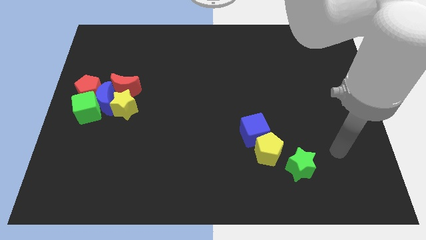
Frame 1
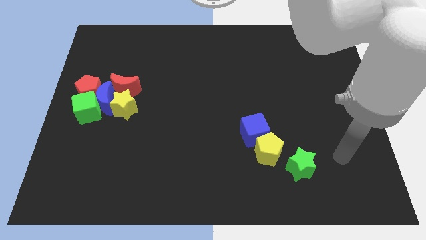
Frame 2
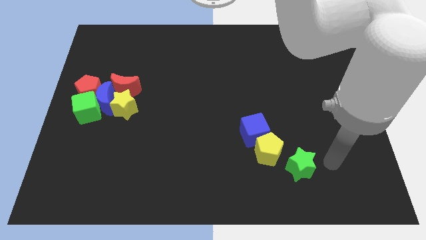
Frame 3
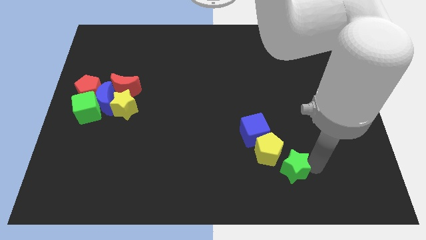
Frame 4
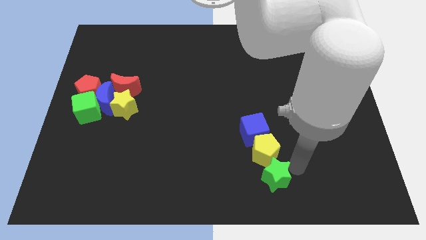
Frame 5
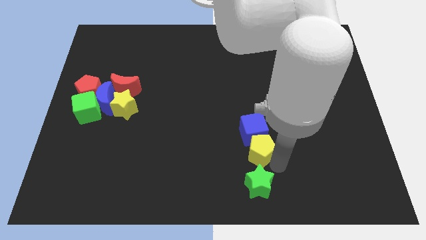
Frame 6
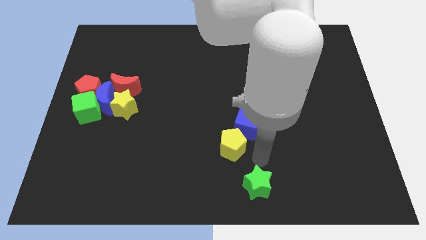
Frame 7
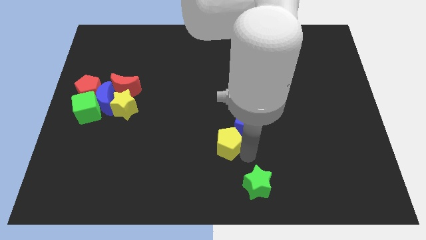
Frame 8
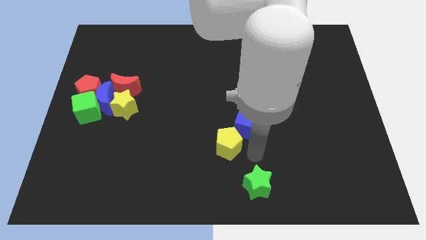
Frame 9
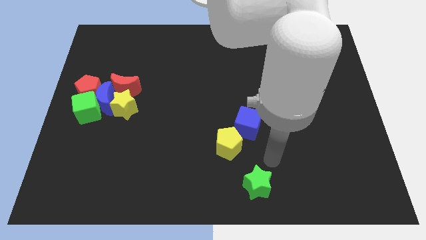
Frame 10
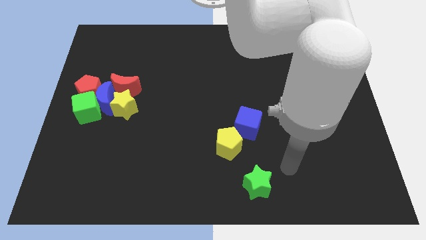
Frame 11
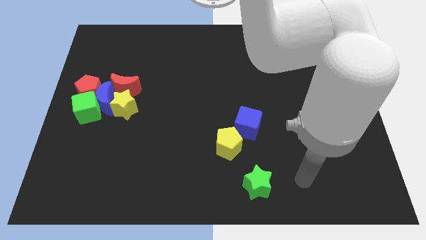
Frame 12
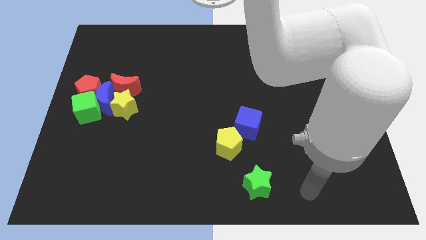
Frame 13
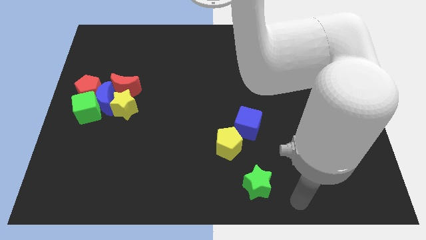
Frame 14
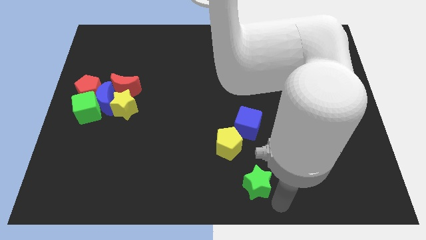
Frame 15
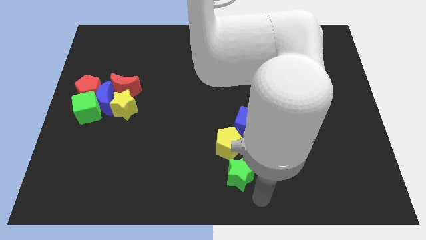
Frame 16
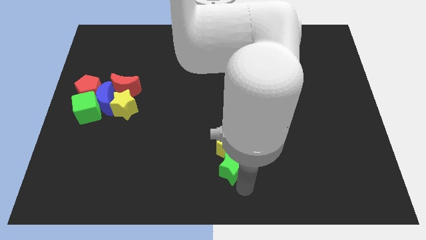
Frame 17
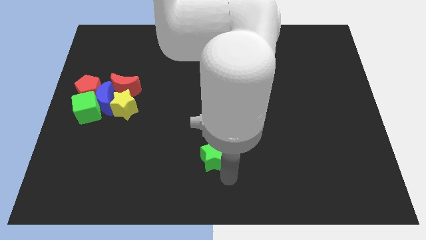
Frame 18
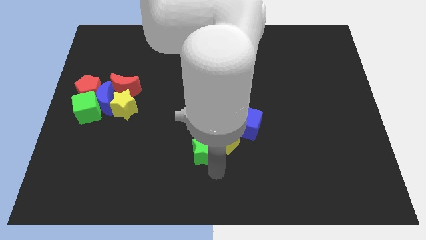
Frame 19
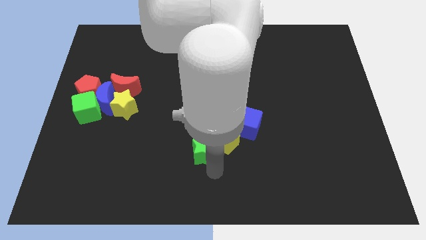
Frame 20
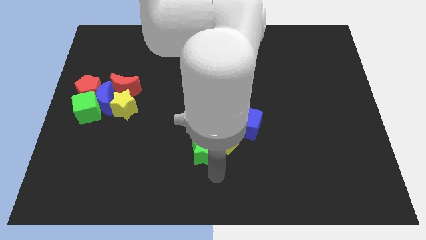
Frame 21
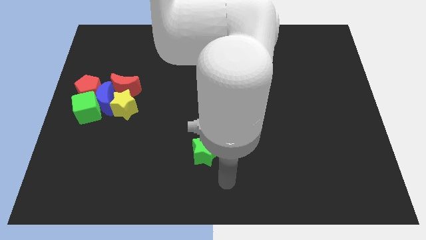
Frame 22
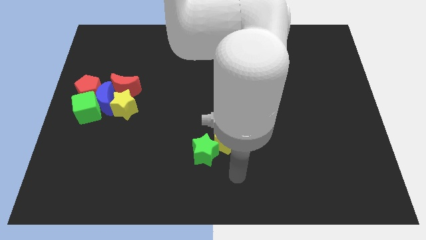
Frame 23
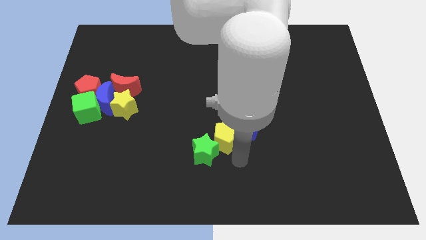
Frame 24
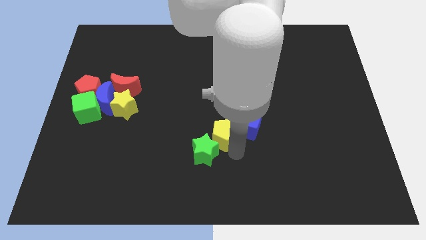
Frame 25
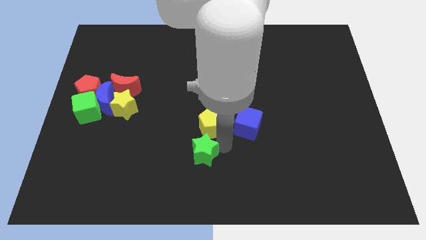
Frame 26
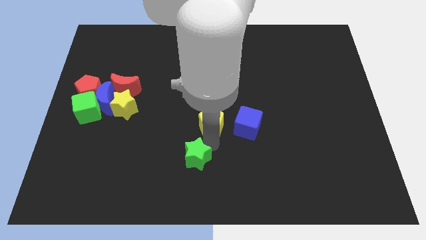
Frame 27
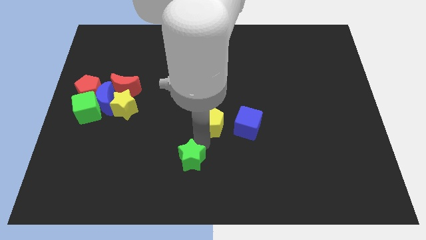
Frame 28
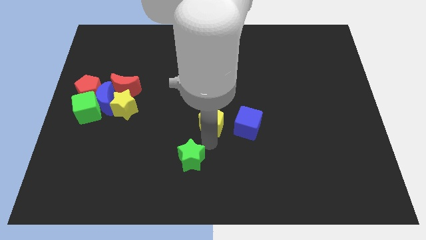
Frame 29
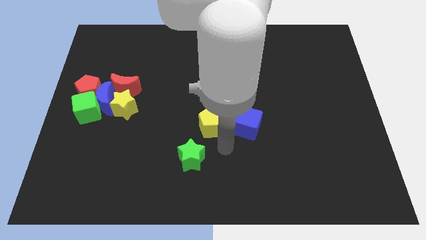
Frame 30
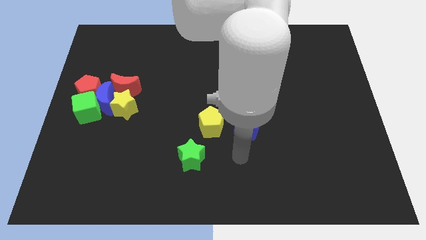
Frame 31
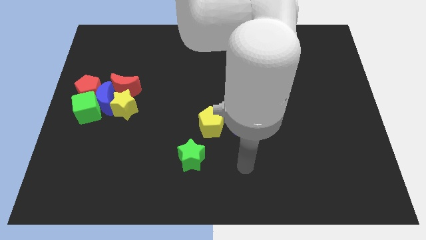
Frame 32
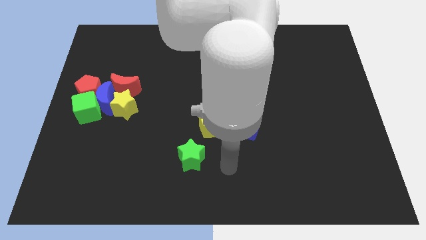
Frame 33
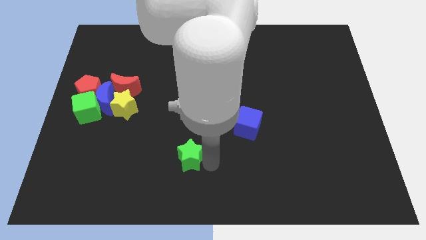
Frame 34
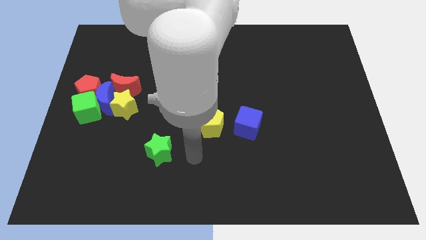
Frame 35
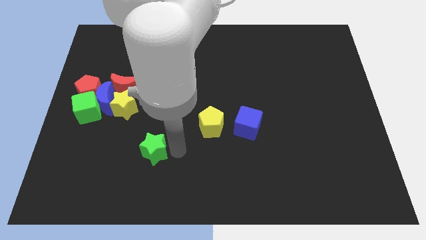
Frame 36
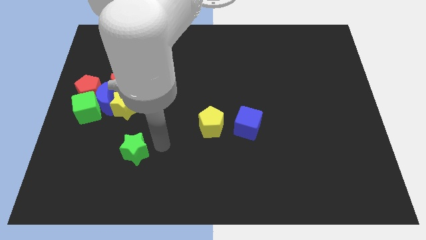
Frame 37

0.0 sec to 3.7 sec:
push the yellow pentagon and the green star to the left of the board

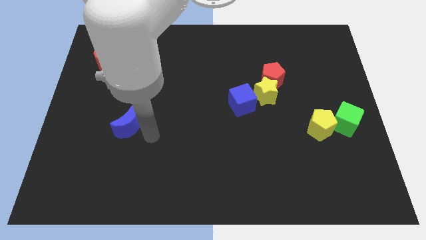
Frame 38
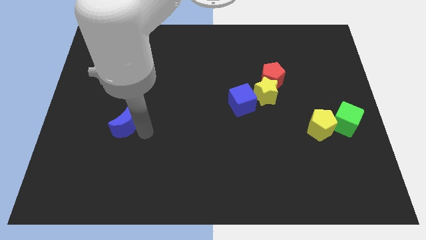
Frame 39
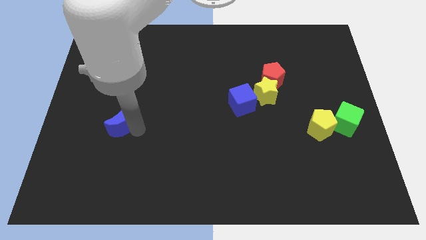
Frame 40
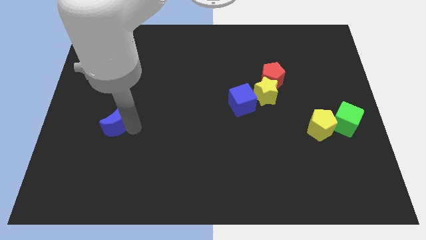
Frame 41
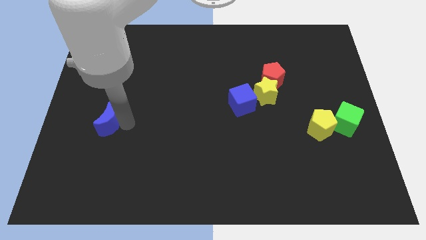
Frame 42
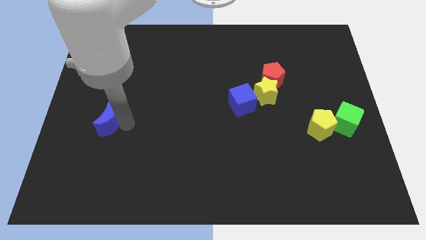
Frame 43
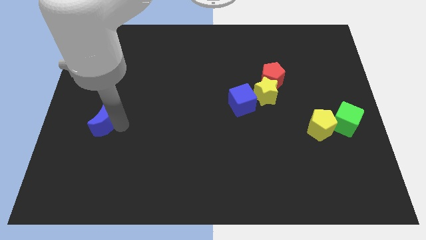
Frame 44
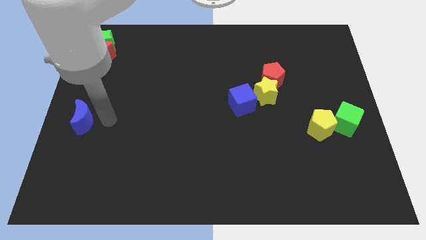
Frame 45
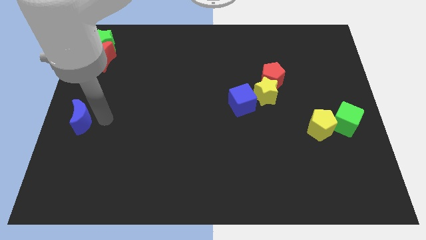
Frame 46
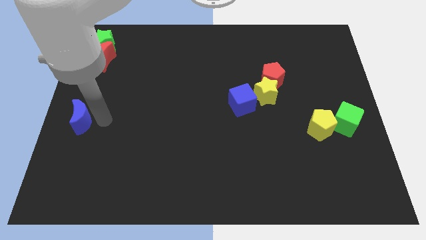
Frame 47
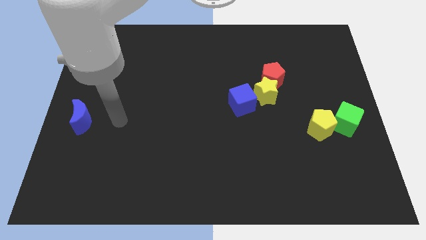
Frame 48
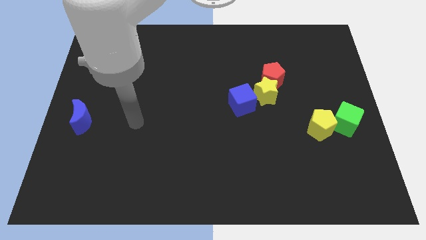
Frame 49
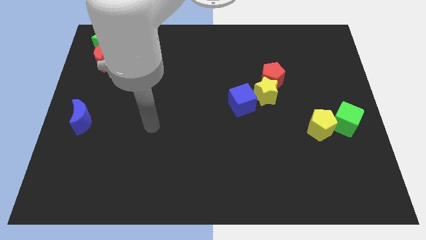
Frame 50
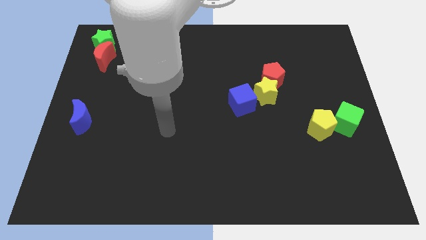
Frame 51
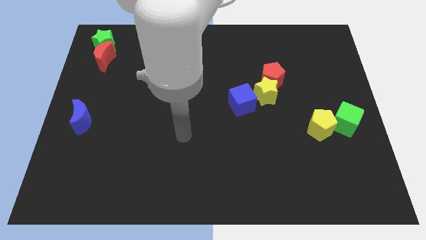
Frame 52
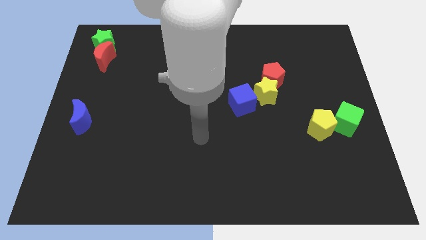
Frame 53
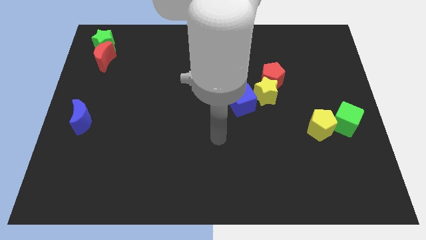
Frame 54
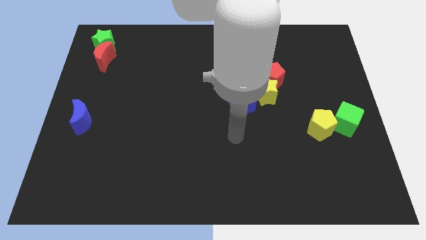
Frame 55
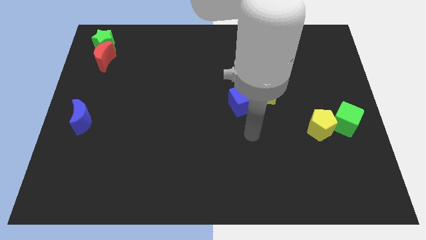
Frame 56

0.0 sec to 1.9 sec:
push the blue crescent to the left center of the board

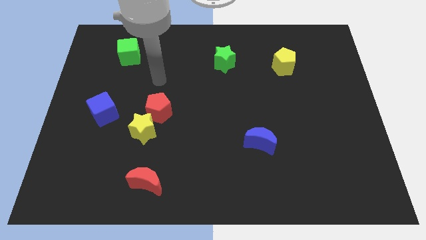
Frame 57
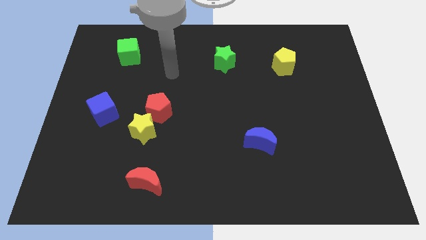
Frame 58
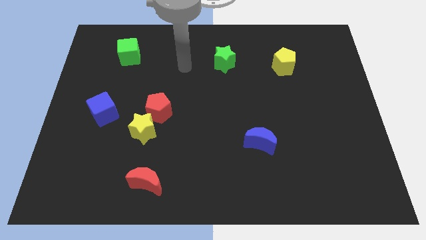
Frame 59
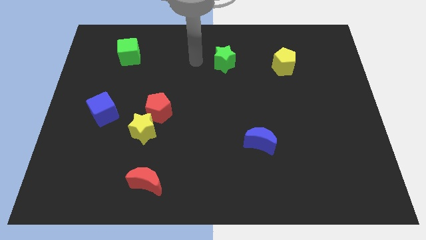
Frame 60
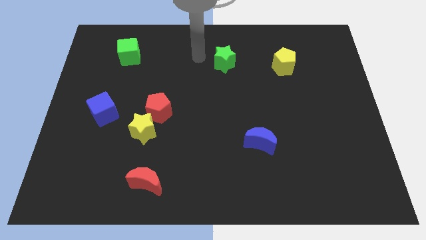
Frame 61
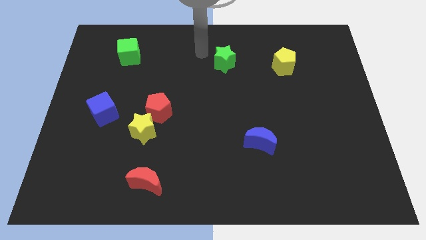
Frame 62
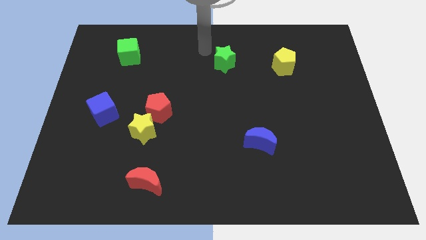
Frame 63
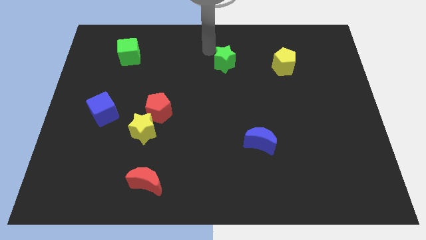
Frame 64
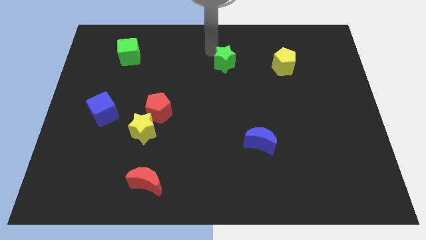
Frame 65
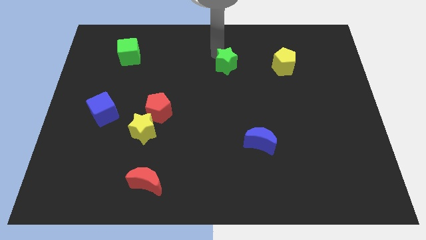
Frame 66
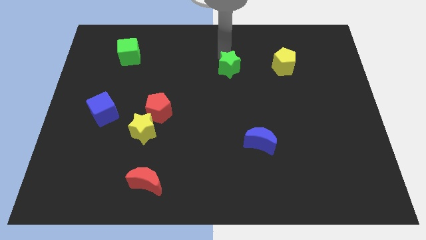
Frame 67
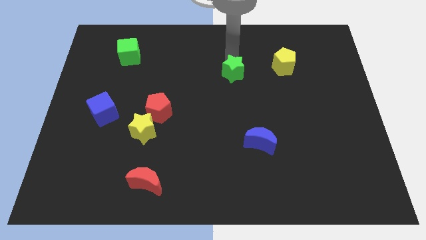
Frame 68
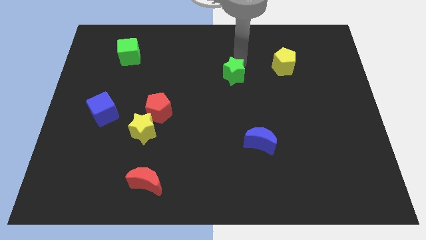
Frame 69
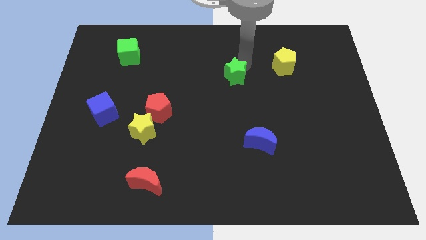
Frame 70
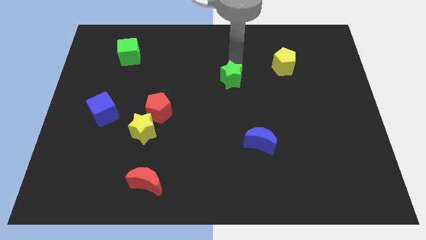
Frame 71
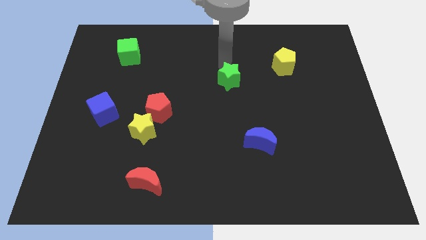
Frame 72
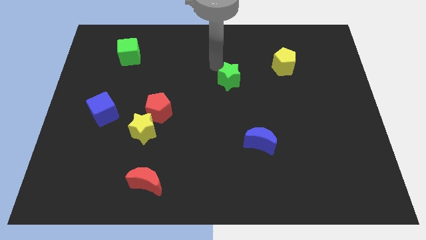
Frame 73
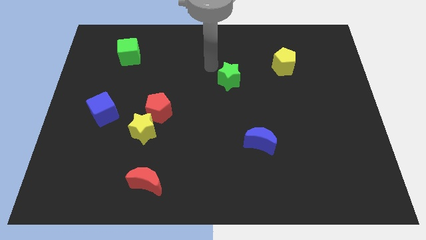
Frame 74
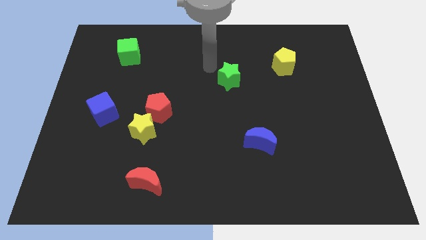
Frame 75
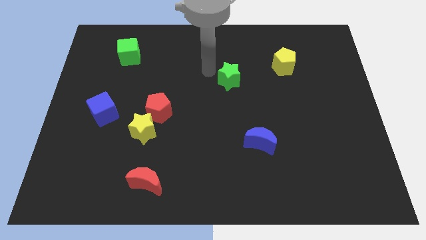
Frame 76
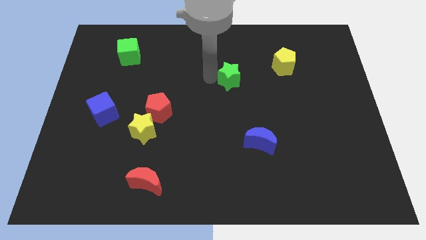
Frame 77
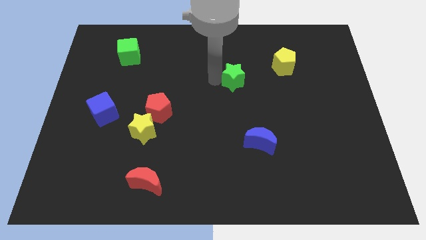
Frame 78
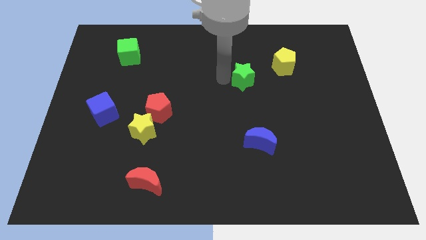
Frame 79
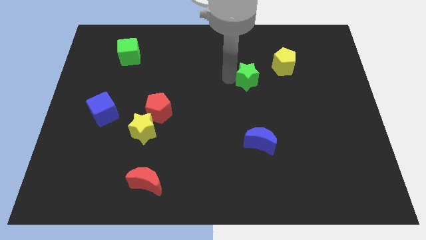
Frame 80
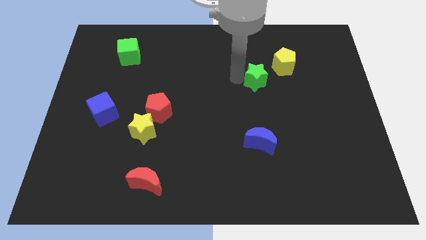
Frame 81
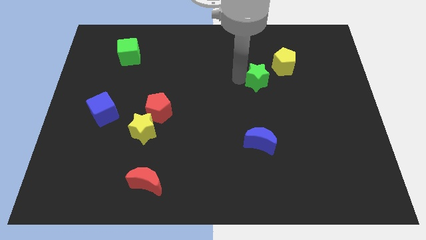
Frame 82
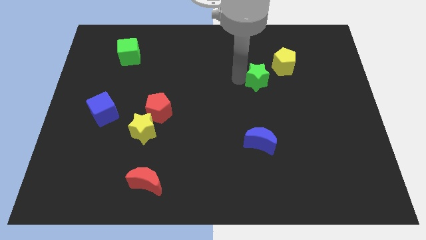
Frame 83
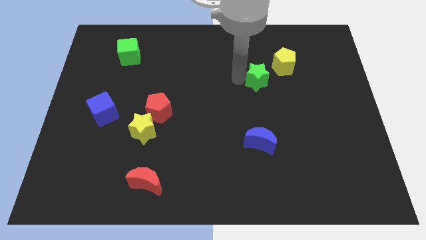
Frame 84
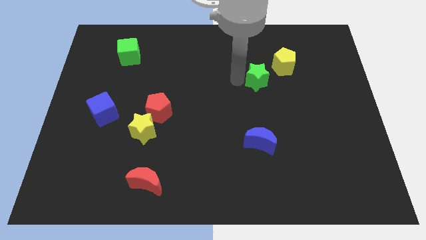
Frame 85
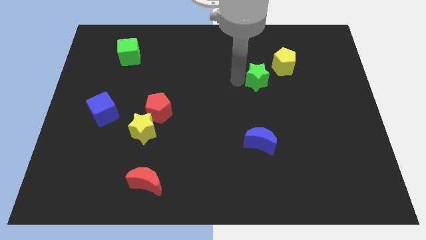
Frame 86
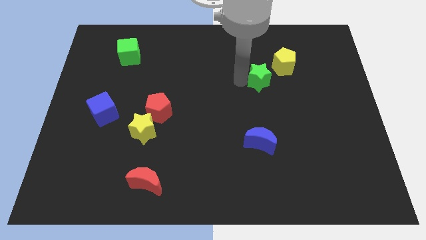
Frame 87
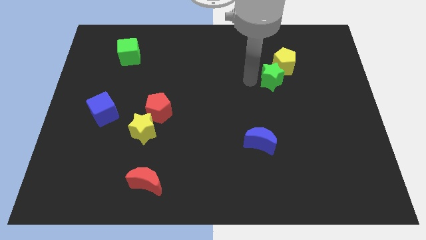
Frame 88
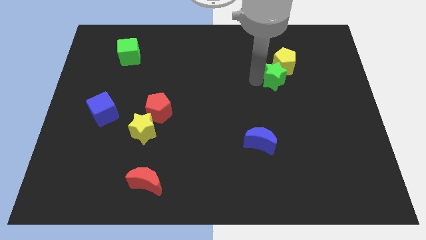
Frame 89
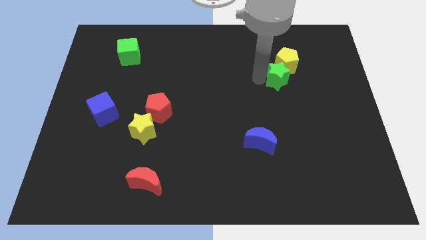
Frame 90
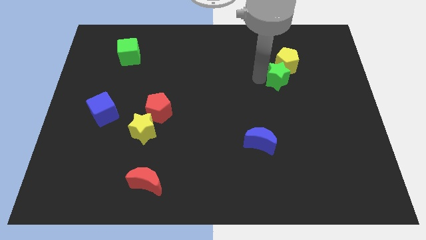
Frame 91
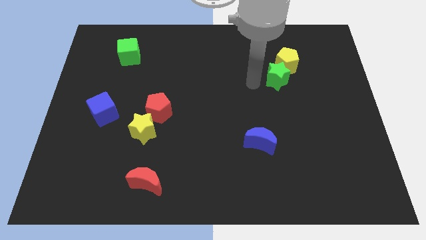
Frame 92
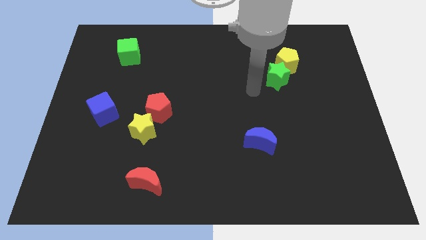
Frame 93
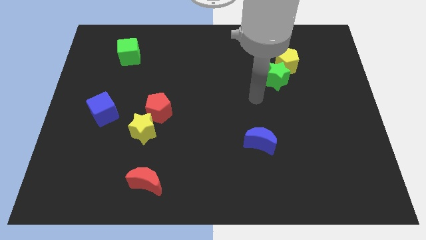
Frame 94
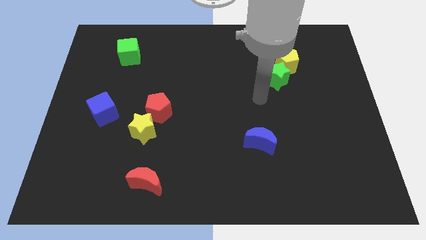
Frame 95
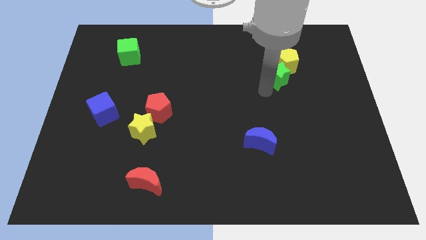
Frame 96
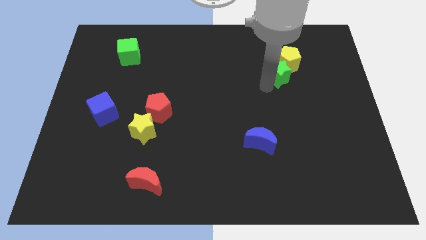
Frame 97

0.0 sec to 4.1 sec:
push the green star into the yellow pentagon
